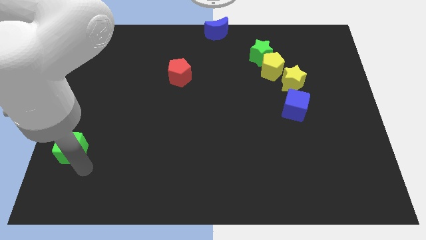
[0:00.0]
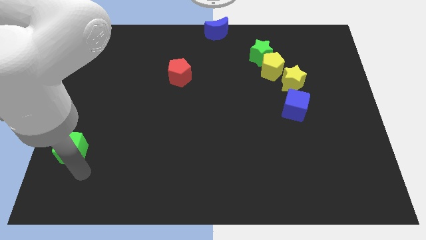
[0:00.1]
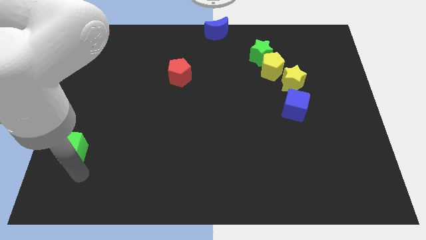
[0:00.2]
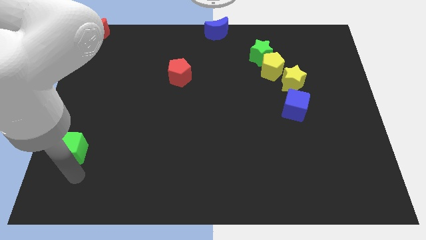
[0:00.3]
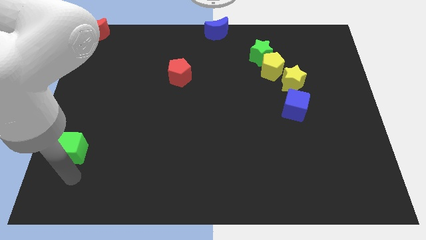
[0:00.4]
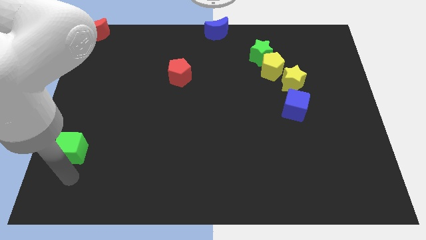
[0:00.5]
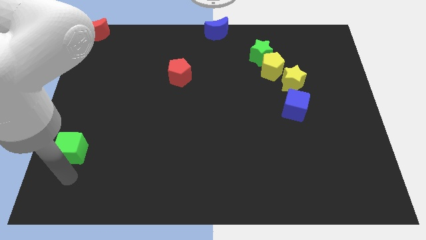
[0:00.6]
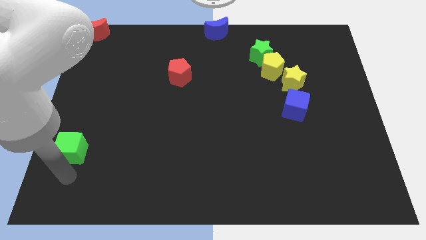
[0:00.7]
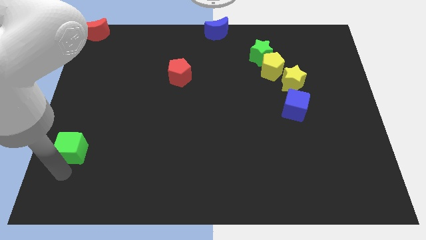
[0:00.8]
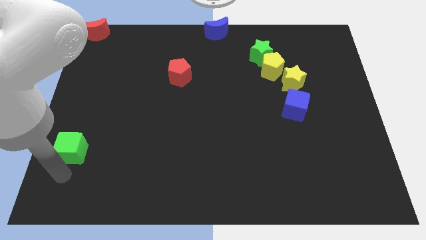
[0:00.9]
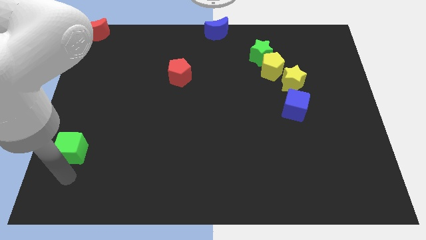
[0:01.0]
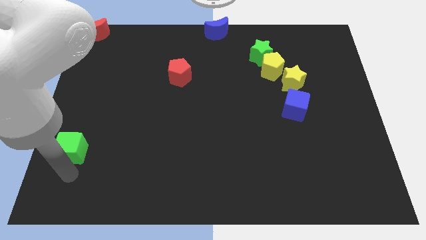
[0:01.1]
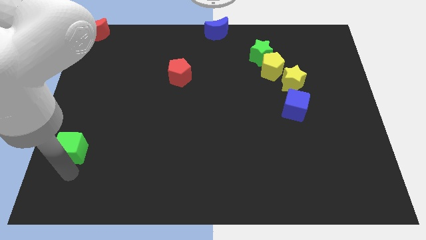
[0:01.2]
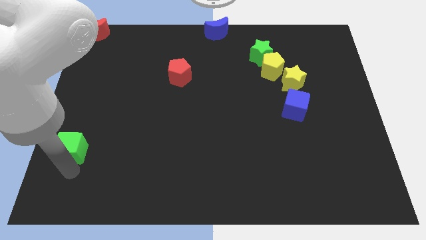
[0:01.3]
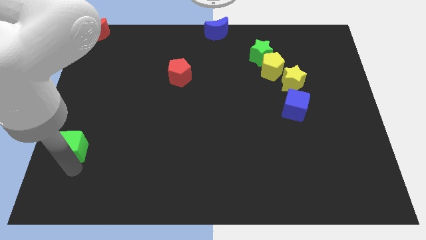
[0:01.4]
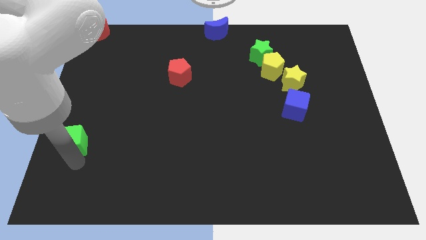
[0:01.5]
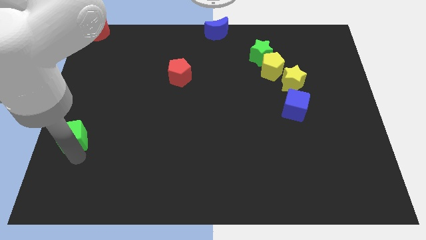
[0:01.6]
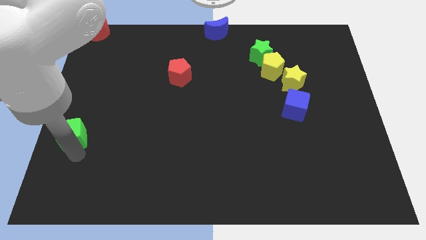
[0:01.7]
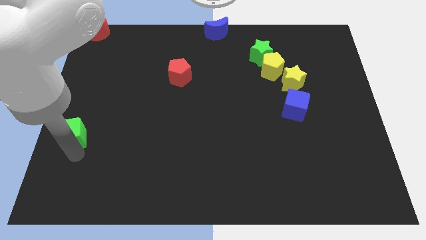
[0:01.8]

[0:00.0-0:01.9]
push the green cube towards the center left side of the table

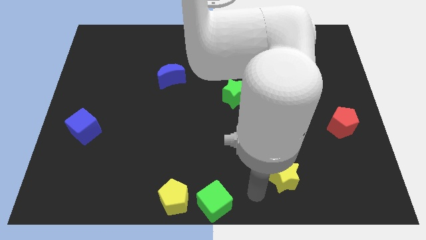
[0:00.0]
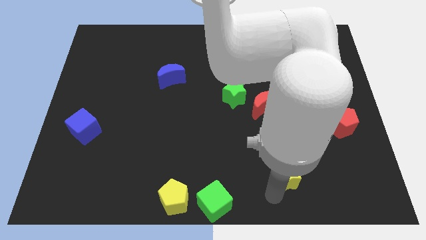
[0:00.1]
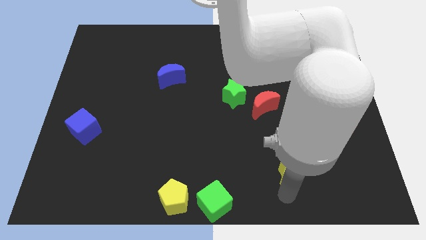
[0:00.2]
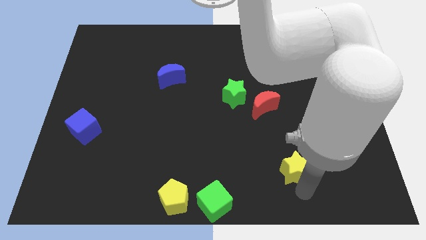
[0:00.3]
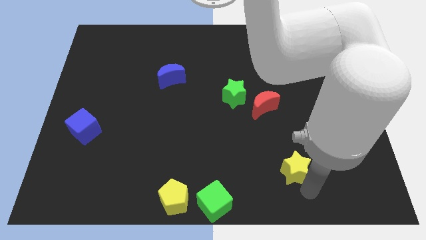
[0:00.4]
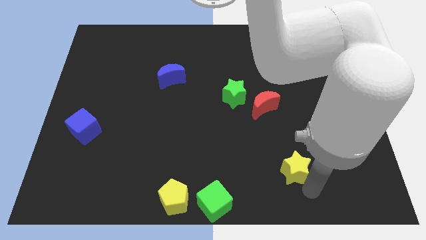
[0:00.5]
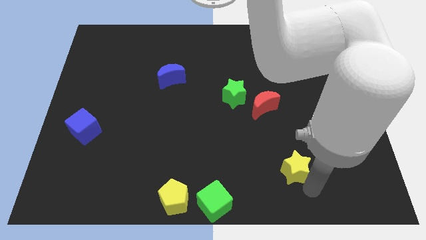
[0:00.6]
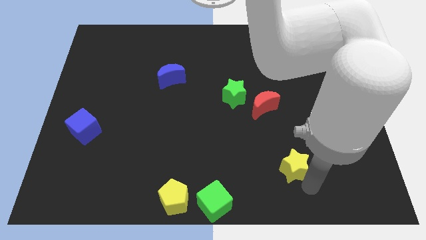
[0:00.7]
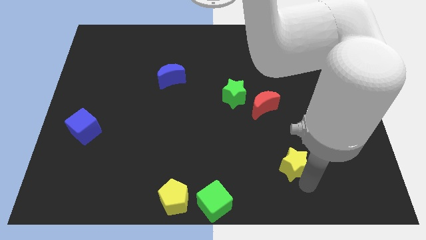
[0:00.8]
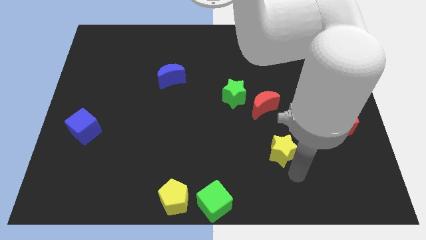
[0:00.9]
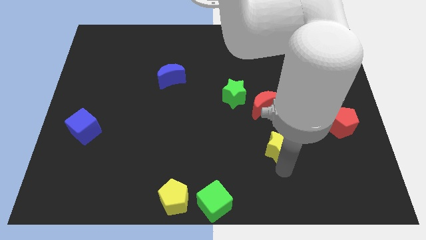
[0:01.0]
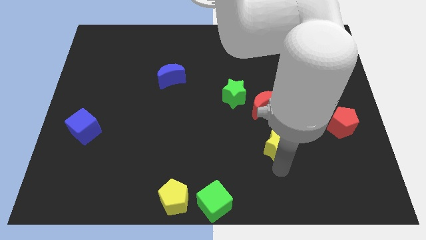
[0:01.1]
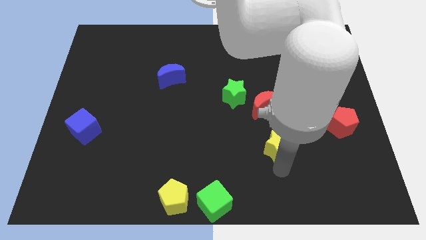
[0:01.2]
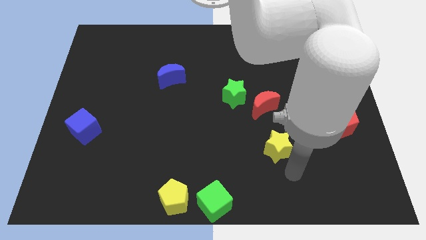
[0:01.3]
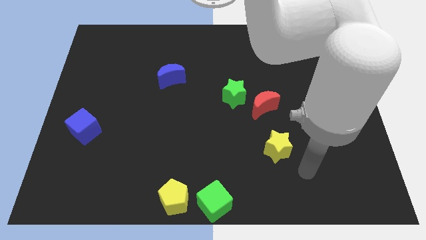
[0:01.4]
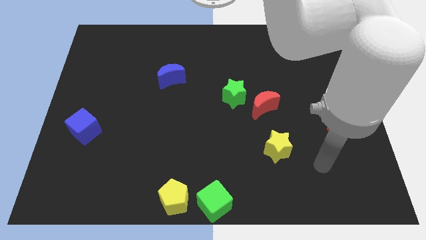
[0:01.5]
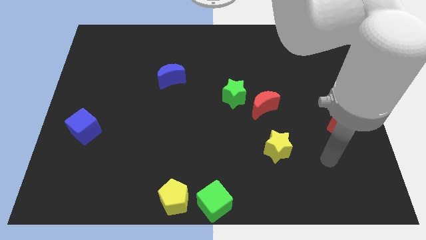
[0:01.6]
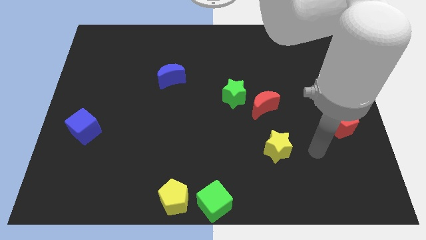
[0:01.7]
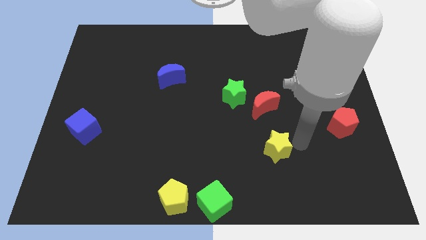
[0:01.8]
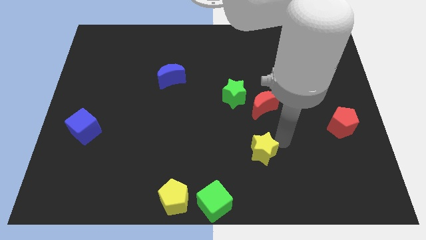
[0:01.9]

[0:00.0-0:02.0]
place the yellow star to the bottom side of the red crescent

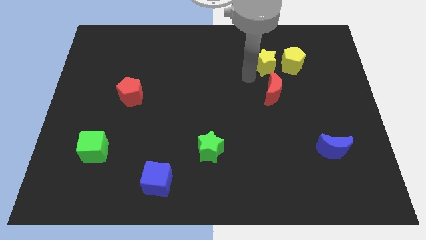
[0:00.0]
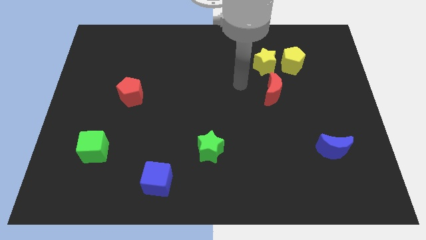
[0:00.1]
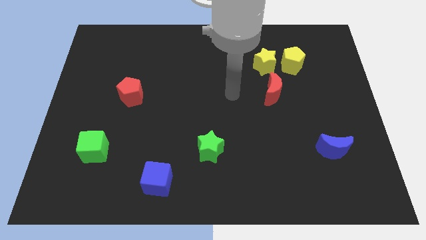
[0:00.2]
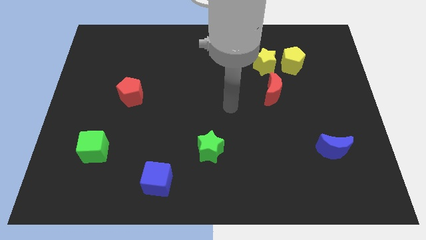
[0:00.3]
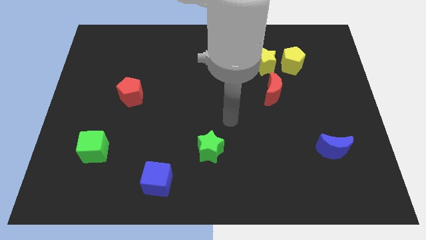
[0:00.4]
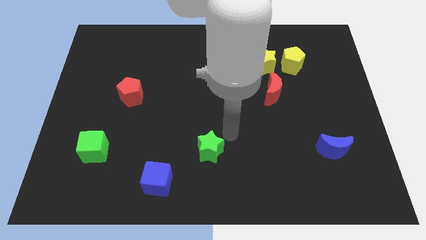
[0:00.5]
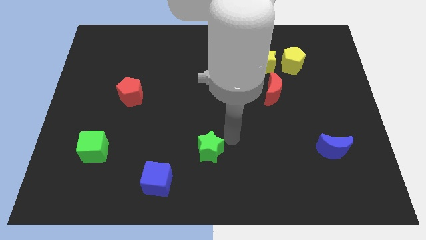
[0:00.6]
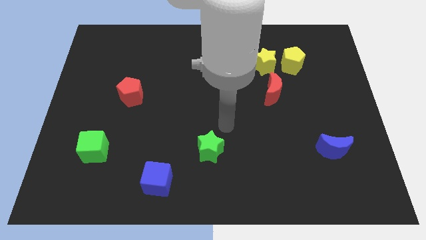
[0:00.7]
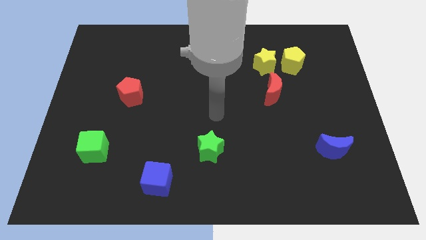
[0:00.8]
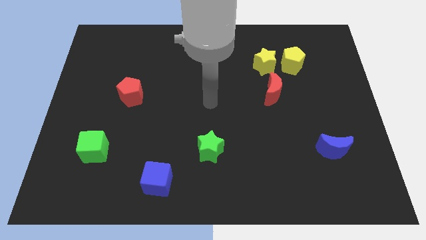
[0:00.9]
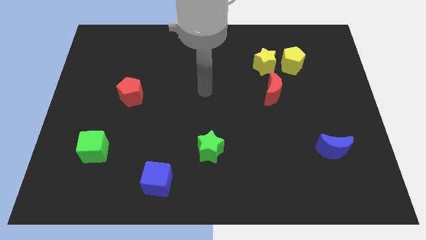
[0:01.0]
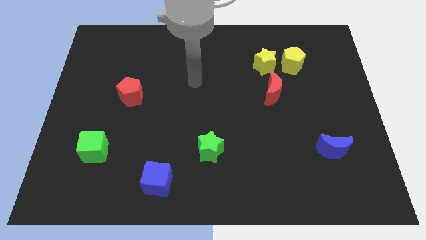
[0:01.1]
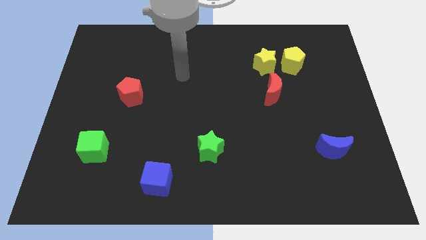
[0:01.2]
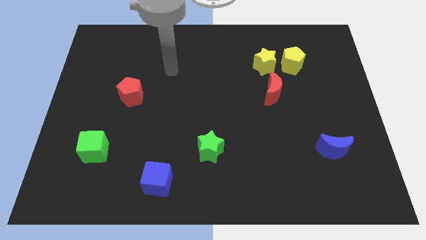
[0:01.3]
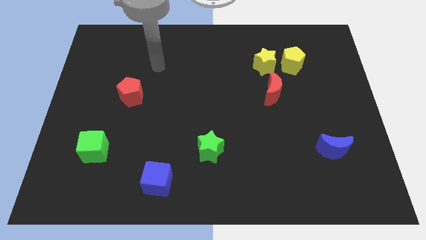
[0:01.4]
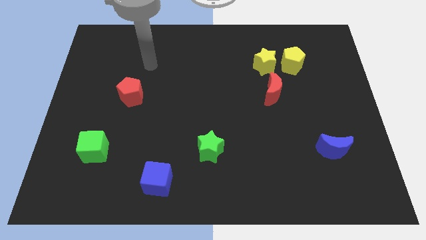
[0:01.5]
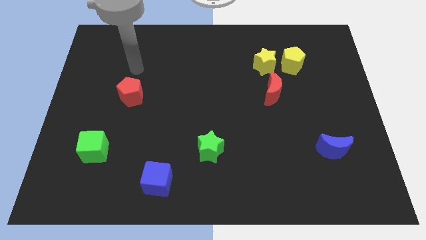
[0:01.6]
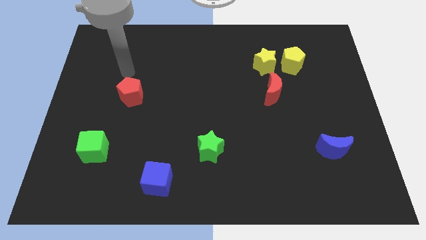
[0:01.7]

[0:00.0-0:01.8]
point your arm at the top of the red pentagon

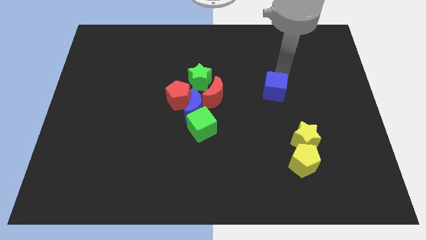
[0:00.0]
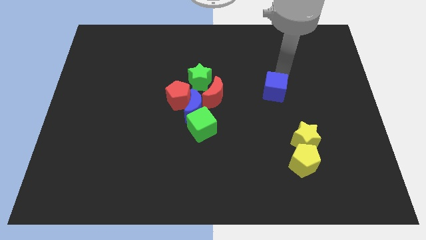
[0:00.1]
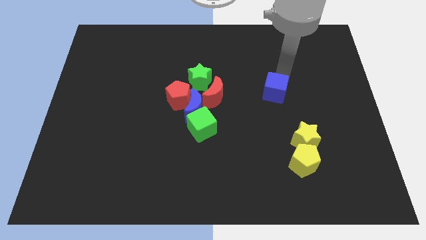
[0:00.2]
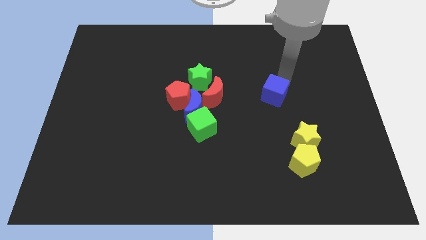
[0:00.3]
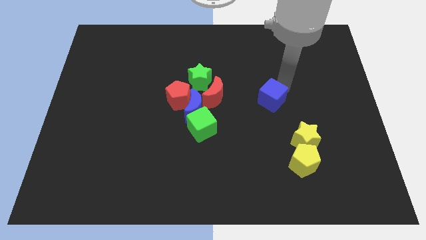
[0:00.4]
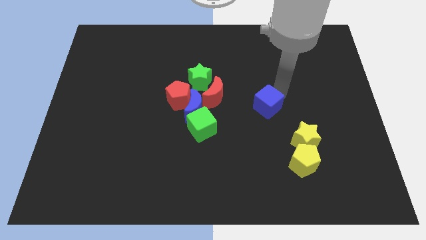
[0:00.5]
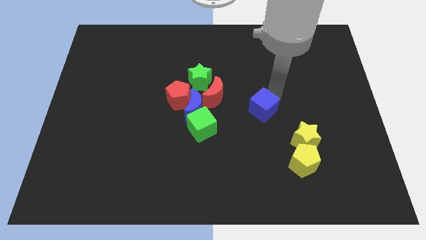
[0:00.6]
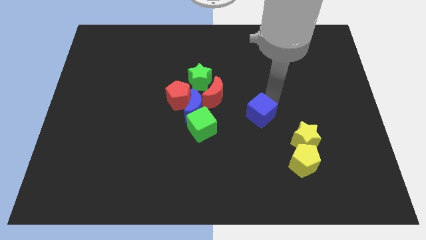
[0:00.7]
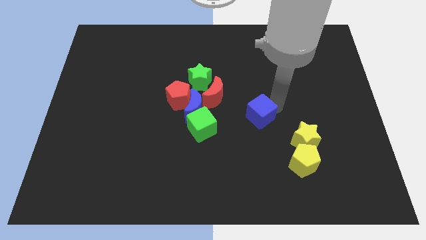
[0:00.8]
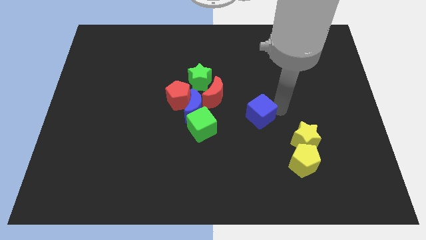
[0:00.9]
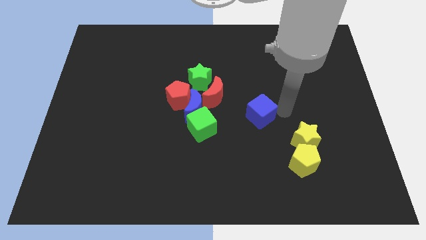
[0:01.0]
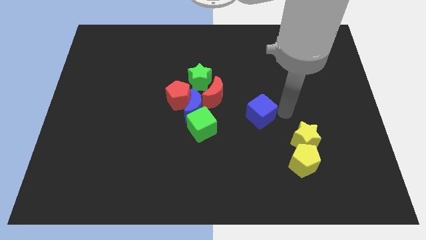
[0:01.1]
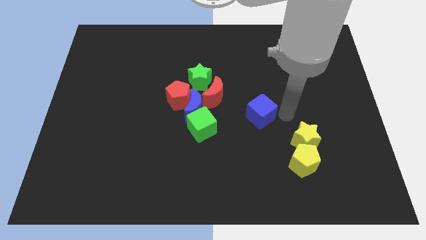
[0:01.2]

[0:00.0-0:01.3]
place blue cube parallel to green cube and blue moon

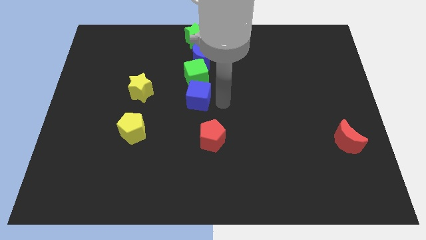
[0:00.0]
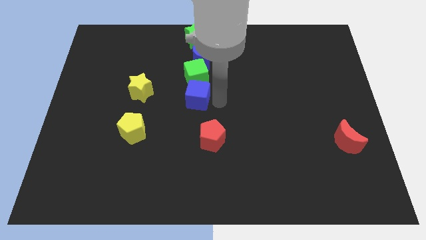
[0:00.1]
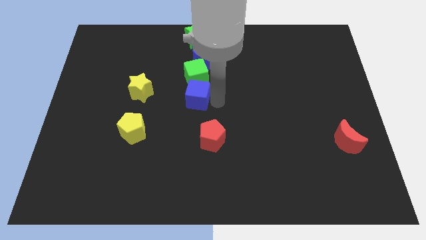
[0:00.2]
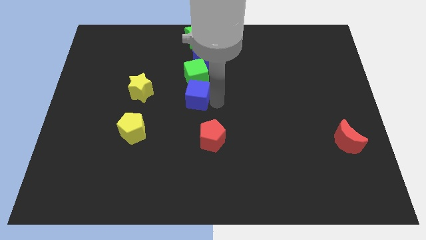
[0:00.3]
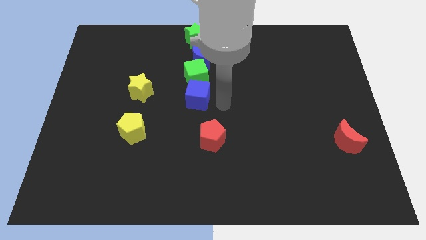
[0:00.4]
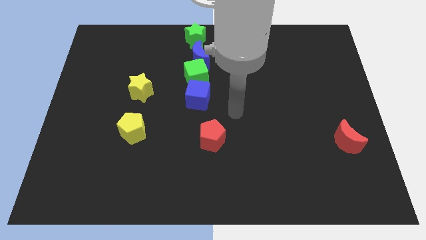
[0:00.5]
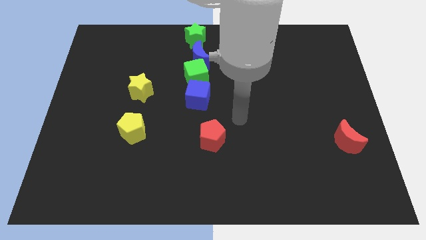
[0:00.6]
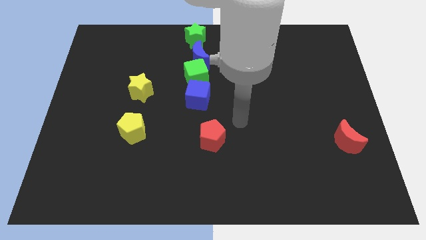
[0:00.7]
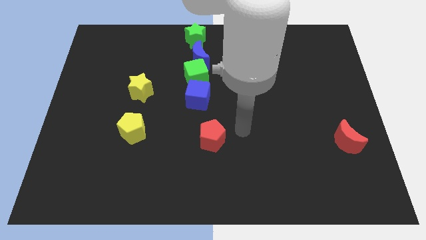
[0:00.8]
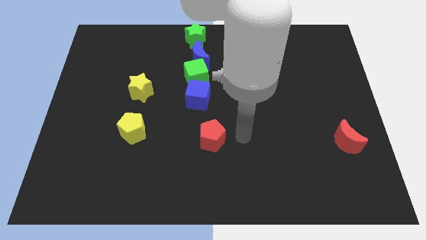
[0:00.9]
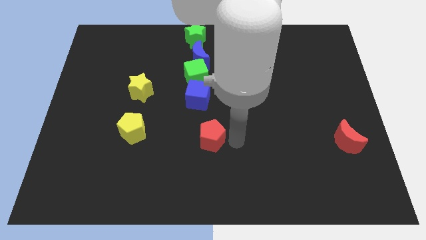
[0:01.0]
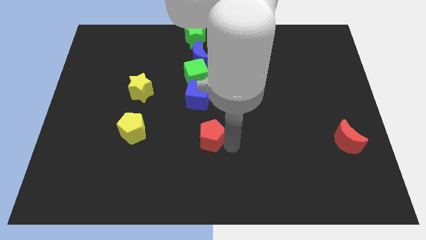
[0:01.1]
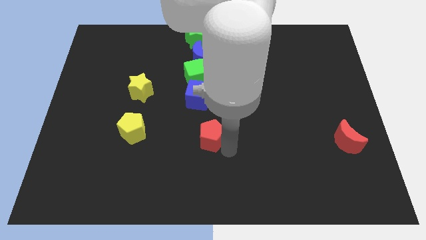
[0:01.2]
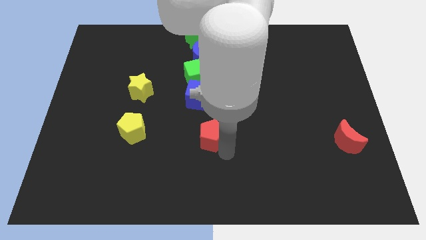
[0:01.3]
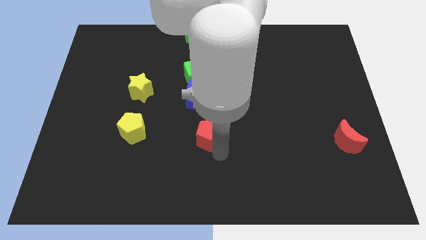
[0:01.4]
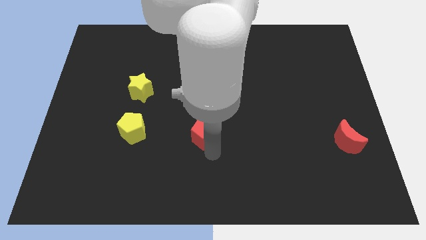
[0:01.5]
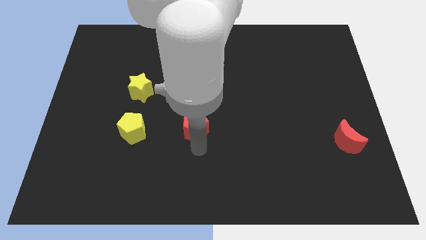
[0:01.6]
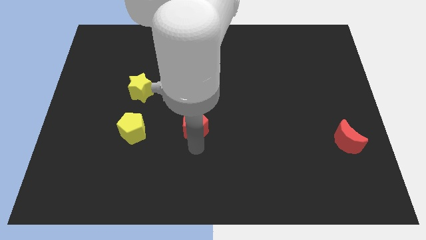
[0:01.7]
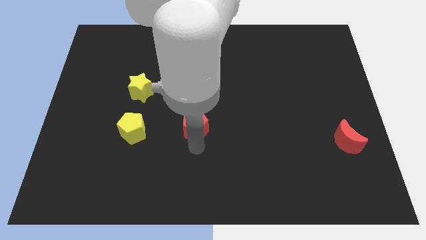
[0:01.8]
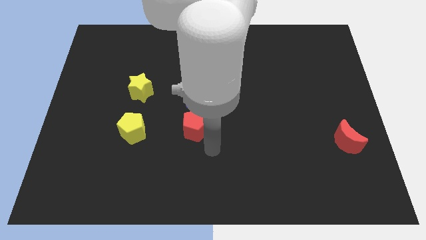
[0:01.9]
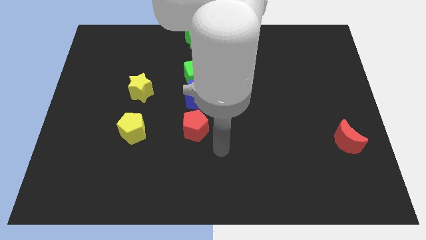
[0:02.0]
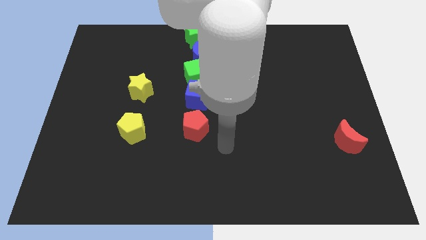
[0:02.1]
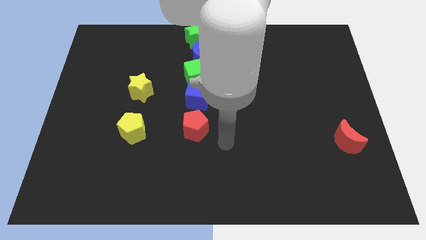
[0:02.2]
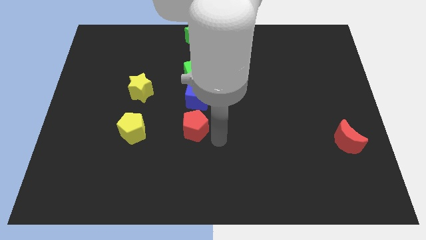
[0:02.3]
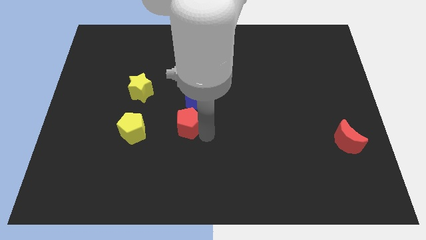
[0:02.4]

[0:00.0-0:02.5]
slide the red pentagon parallel to yellow pentagon
